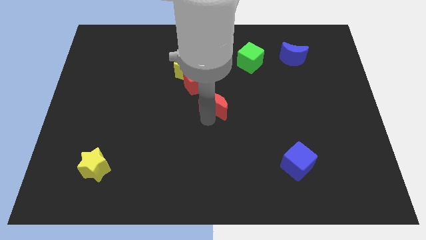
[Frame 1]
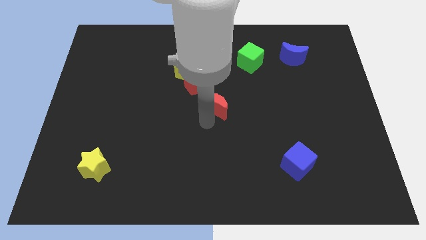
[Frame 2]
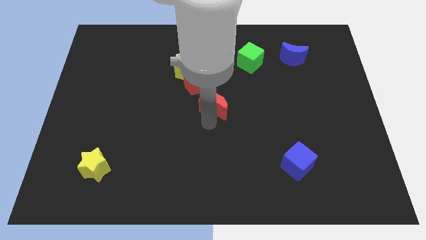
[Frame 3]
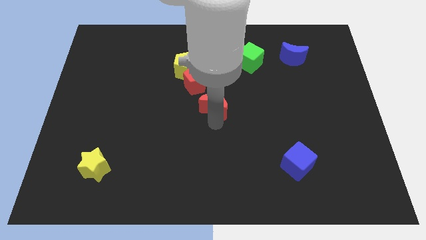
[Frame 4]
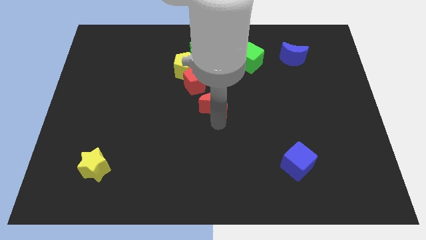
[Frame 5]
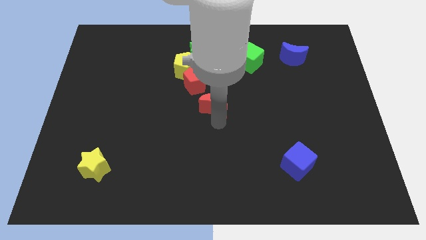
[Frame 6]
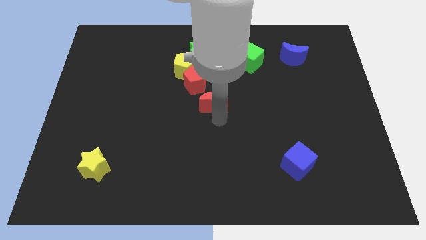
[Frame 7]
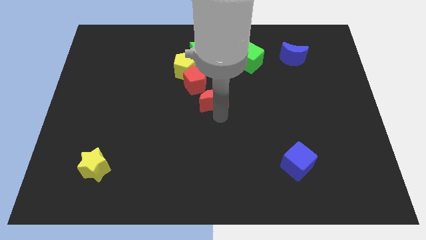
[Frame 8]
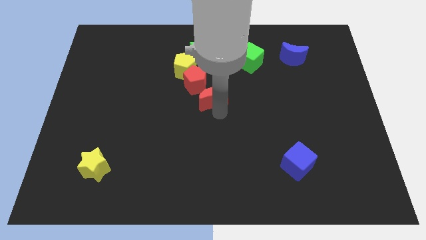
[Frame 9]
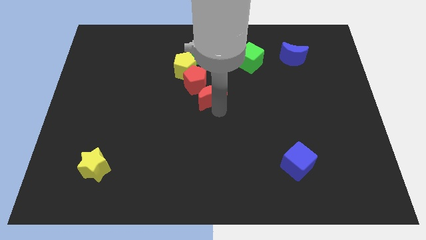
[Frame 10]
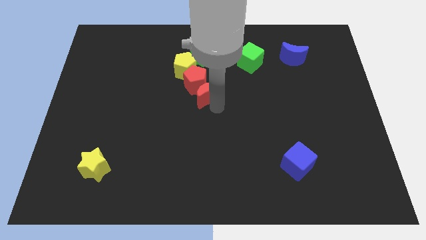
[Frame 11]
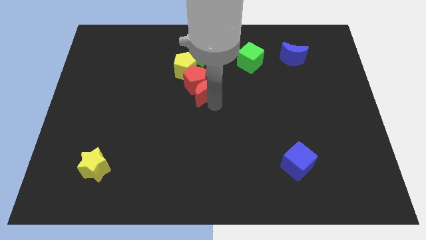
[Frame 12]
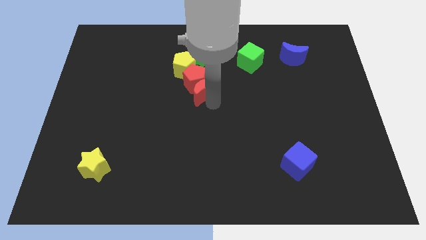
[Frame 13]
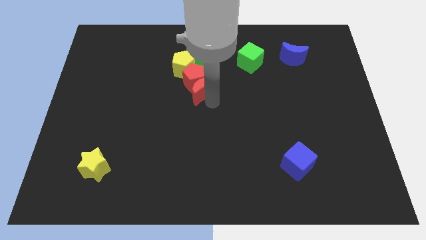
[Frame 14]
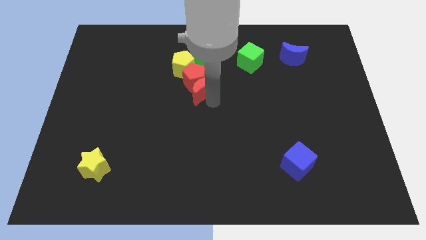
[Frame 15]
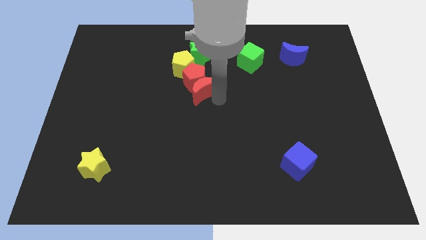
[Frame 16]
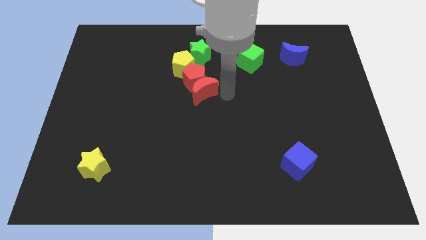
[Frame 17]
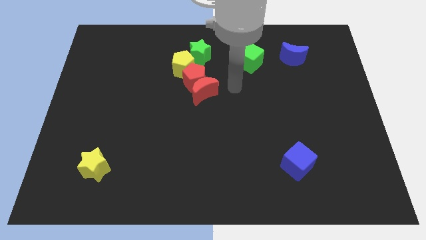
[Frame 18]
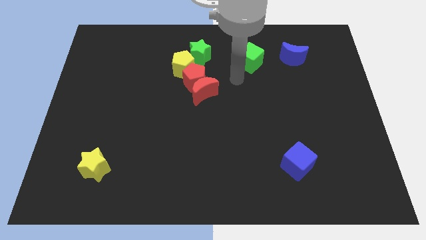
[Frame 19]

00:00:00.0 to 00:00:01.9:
put the red crescent into the red pentagon

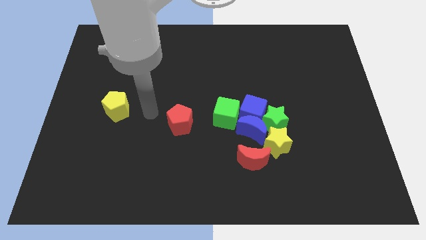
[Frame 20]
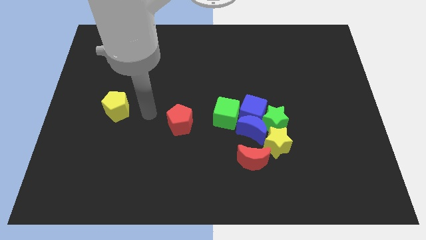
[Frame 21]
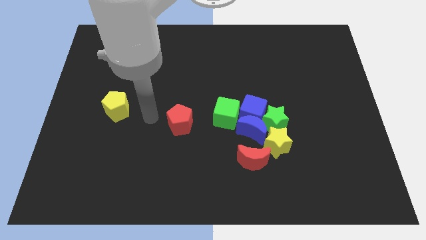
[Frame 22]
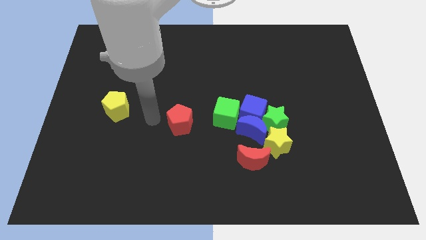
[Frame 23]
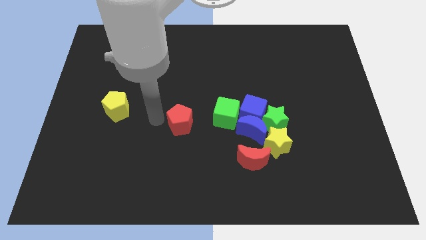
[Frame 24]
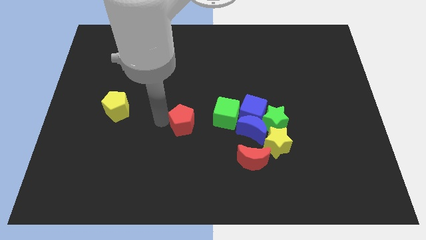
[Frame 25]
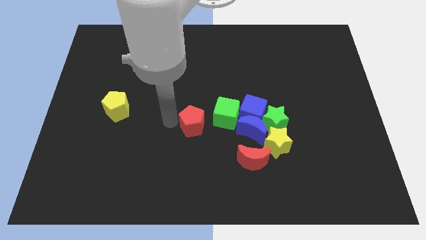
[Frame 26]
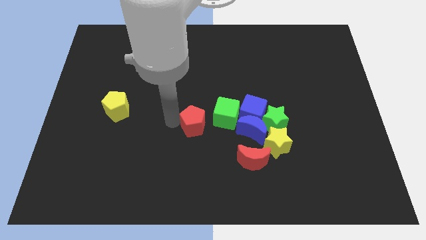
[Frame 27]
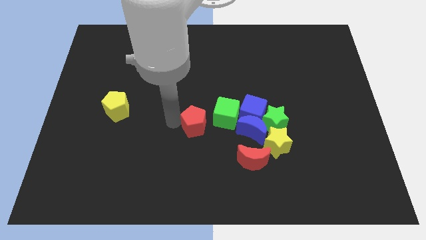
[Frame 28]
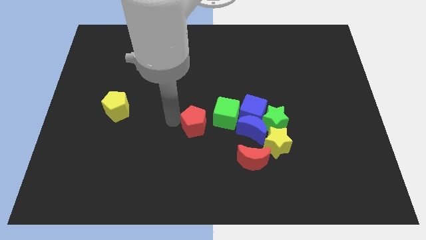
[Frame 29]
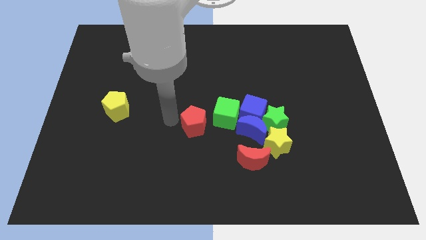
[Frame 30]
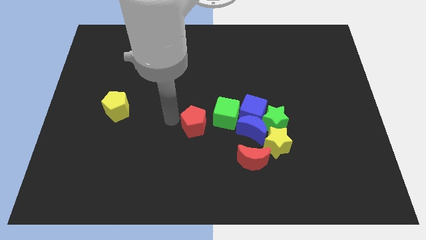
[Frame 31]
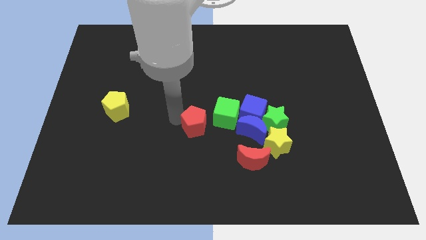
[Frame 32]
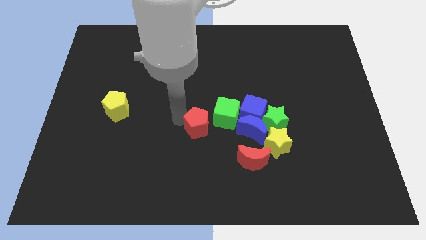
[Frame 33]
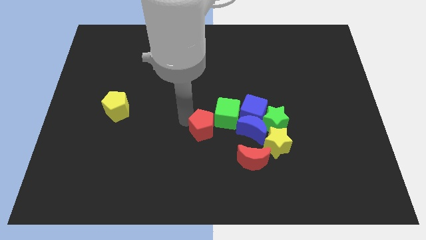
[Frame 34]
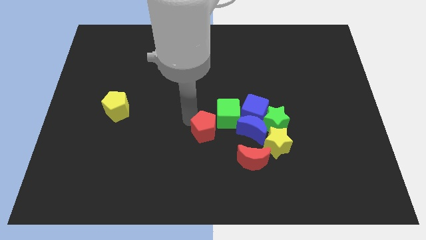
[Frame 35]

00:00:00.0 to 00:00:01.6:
move the red pentagon to the left of the green cube

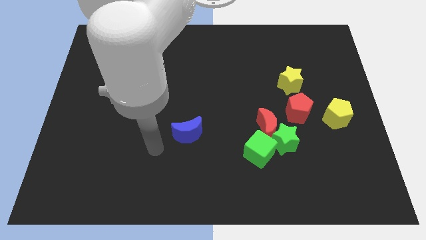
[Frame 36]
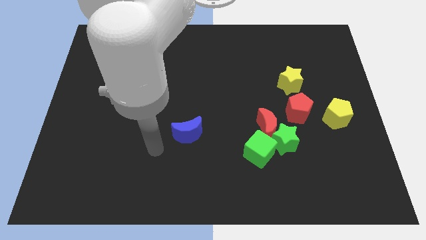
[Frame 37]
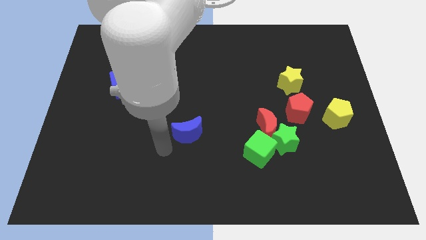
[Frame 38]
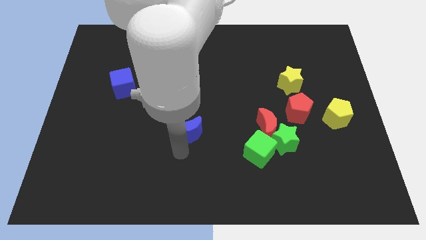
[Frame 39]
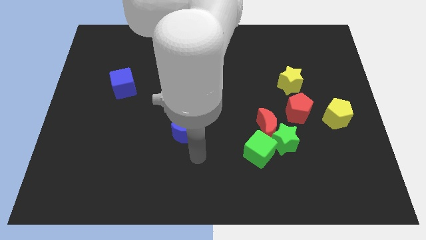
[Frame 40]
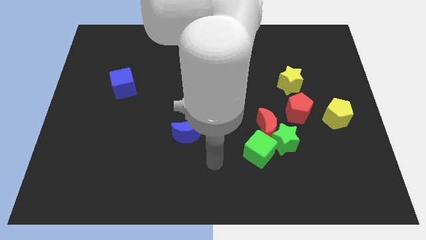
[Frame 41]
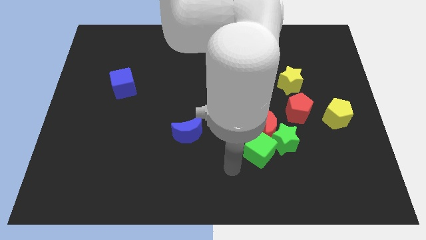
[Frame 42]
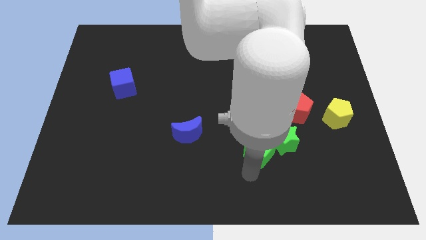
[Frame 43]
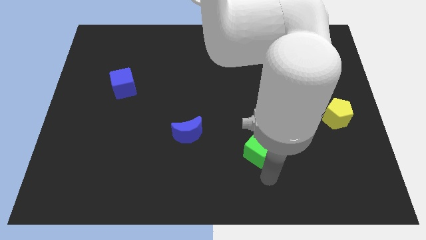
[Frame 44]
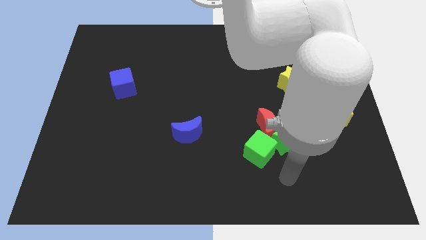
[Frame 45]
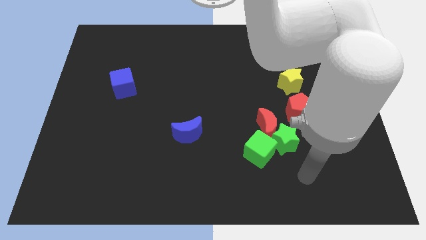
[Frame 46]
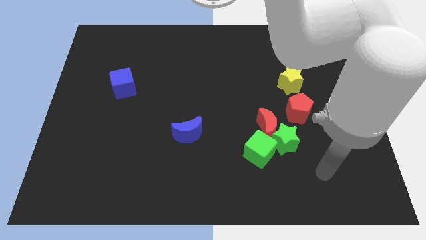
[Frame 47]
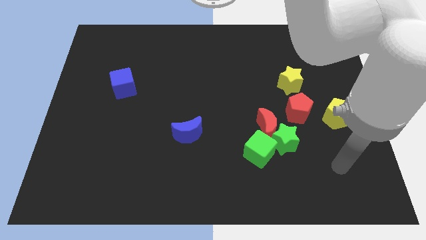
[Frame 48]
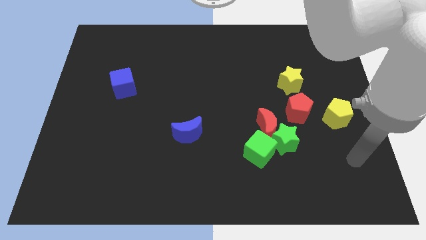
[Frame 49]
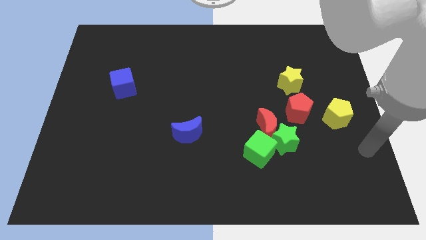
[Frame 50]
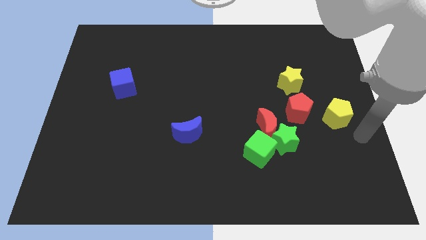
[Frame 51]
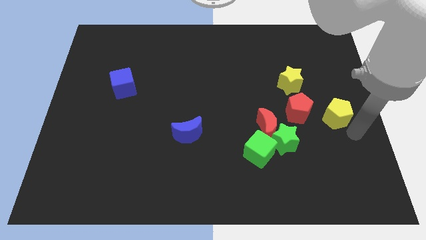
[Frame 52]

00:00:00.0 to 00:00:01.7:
move your arm below the yellow pentagon

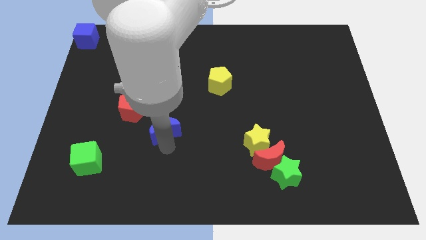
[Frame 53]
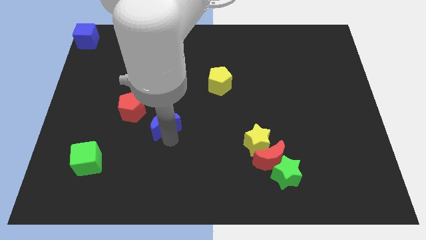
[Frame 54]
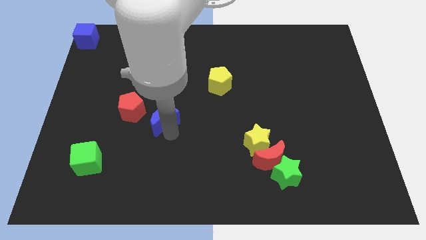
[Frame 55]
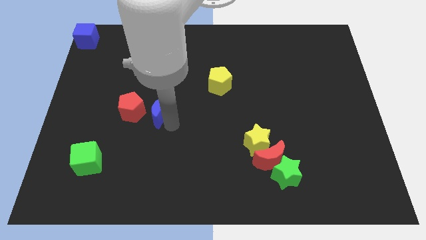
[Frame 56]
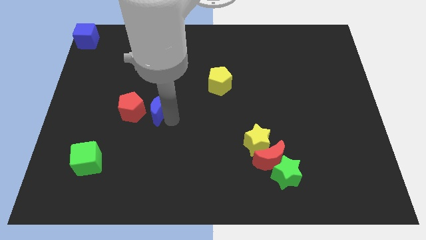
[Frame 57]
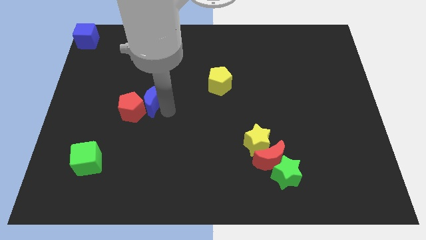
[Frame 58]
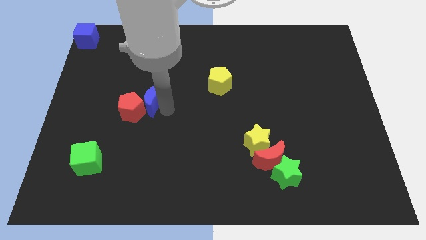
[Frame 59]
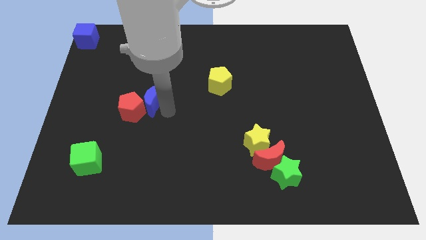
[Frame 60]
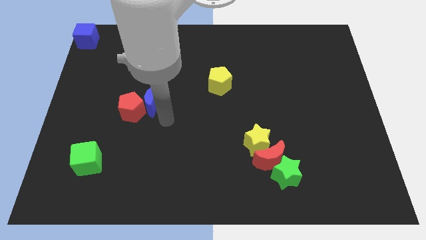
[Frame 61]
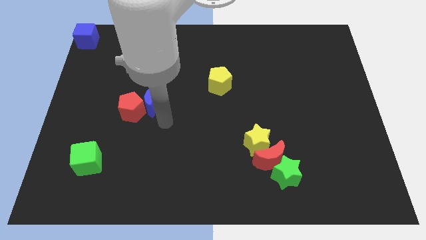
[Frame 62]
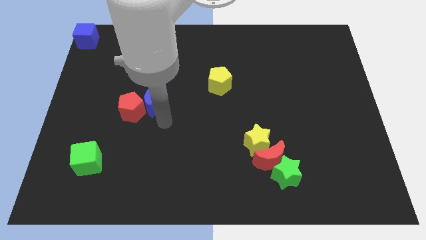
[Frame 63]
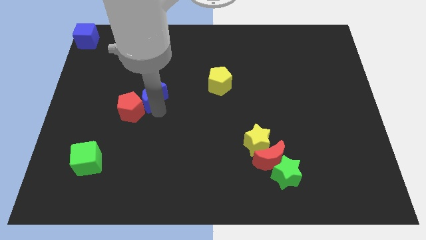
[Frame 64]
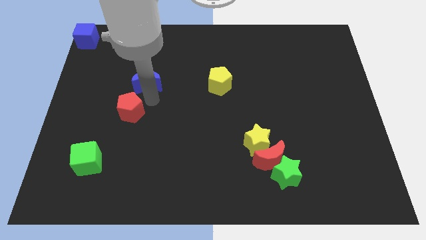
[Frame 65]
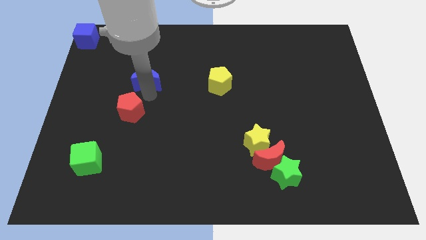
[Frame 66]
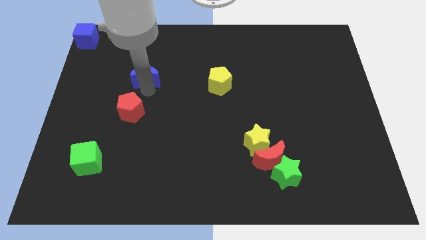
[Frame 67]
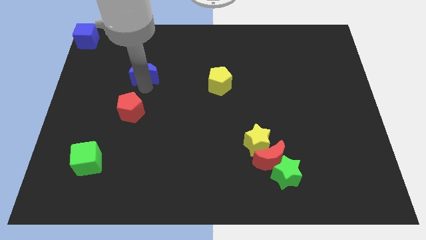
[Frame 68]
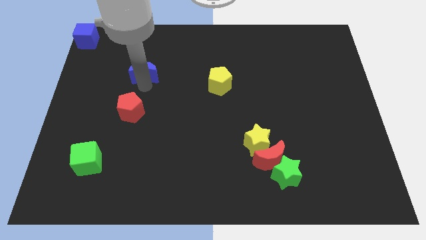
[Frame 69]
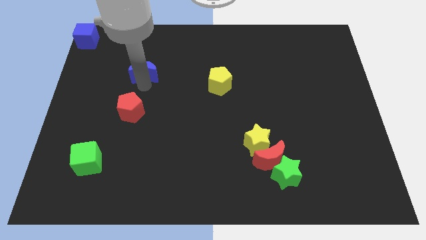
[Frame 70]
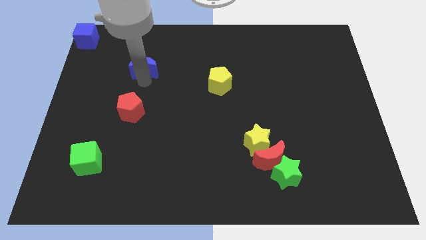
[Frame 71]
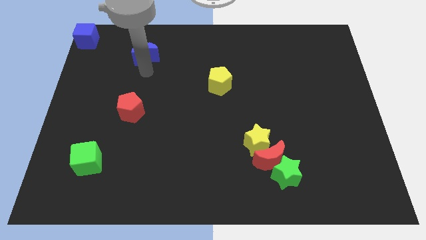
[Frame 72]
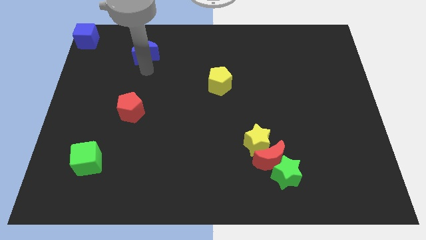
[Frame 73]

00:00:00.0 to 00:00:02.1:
slide the blue moon above the red pentagon

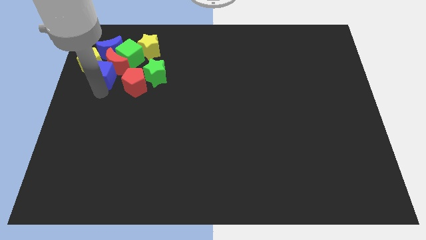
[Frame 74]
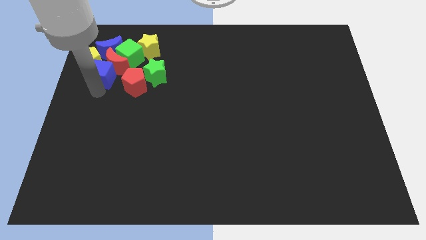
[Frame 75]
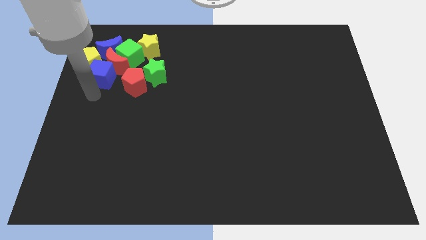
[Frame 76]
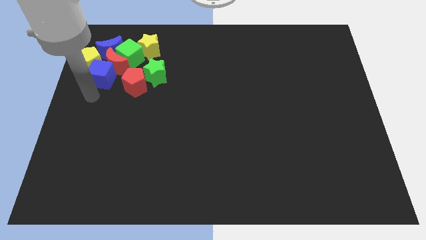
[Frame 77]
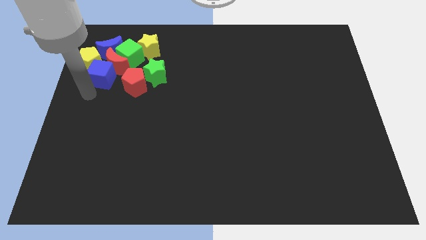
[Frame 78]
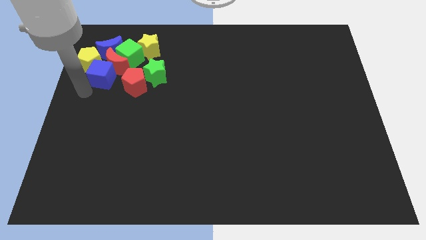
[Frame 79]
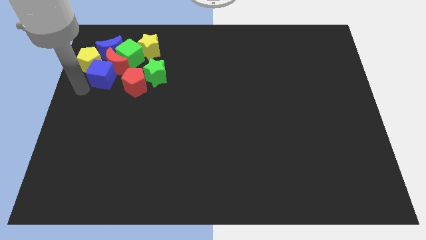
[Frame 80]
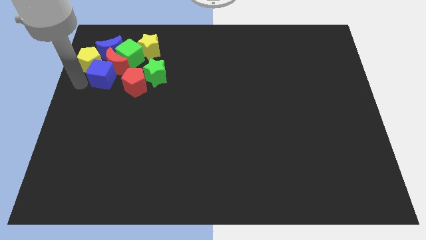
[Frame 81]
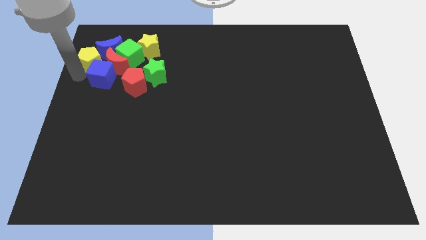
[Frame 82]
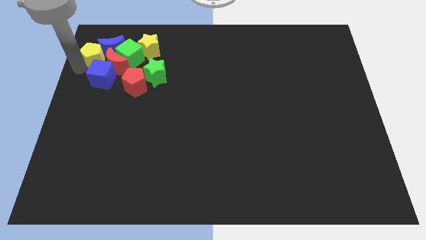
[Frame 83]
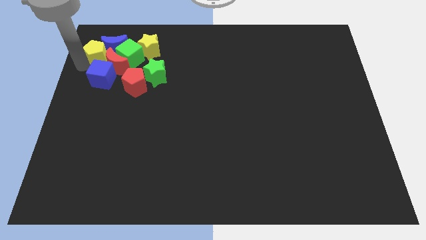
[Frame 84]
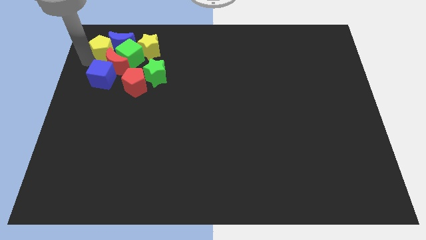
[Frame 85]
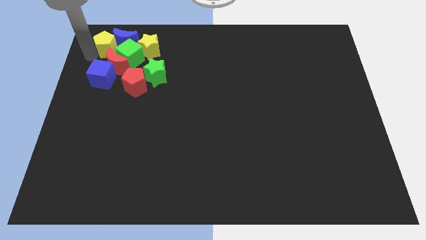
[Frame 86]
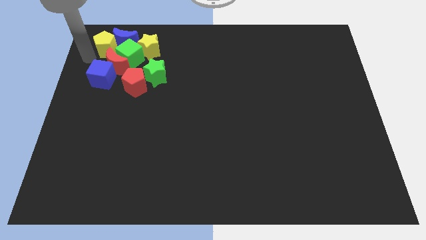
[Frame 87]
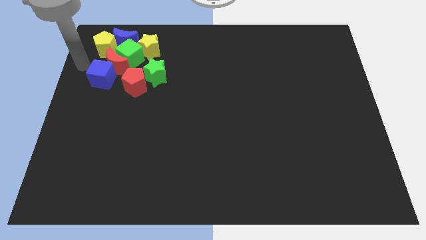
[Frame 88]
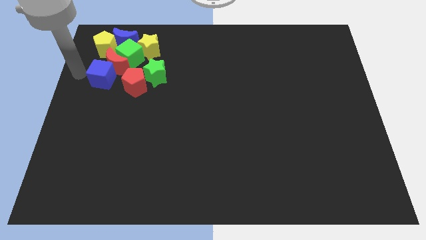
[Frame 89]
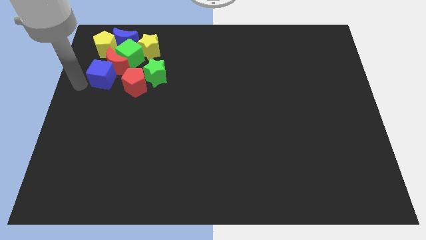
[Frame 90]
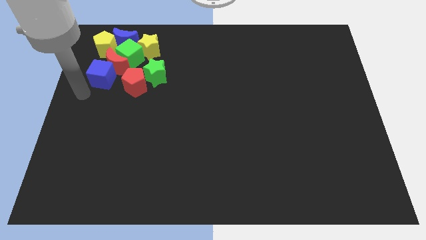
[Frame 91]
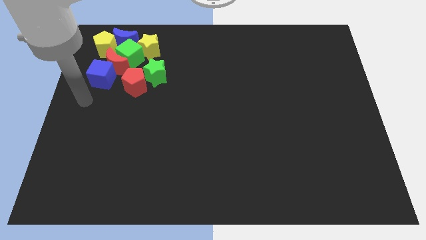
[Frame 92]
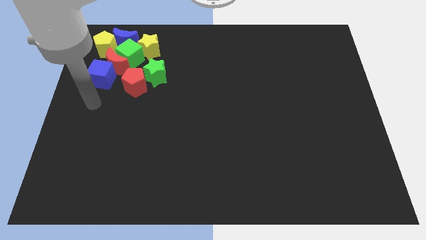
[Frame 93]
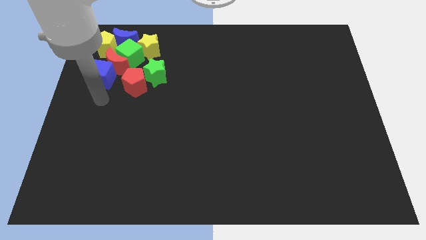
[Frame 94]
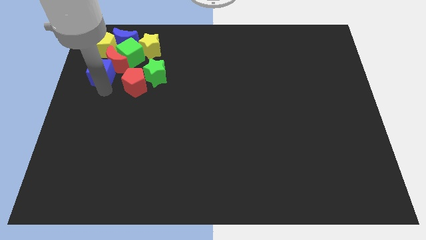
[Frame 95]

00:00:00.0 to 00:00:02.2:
slightly push the yellow pentagon and blue moon upwards
